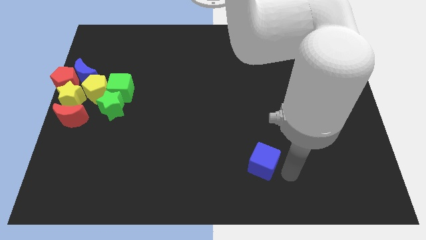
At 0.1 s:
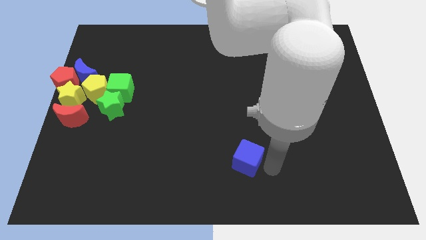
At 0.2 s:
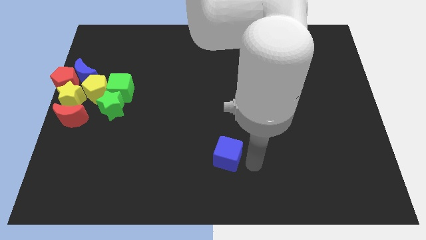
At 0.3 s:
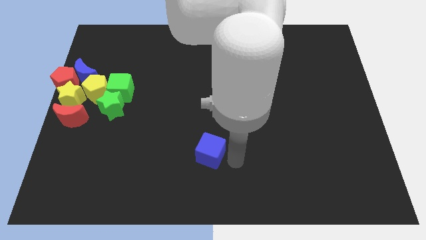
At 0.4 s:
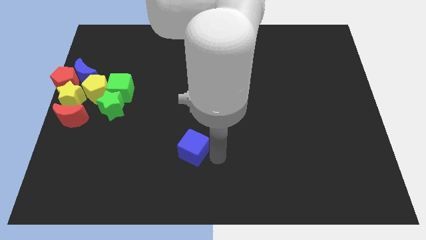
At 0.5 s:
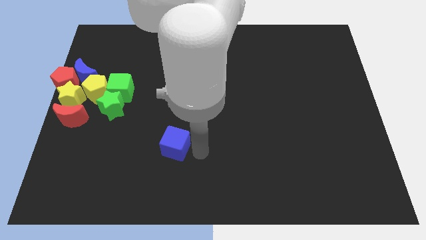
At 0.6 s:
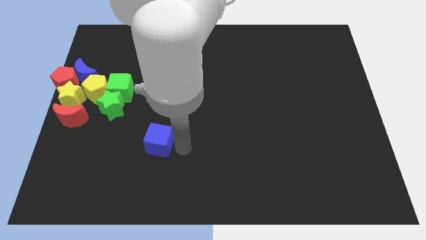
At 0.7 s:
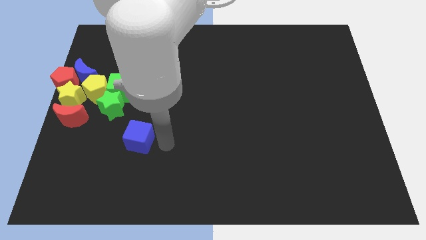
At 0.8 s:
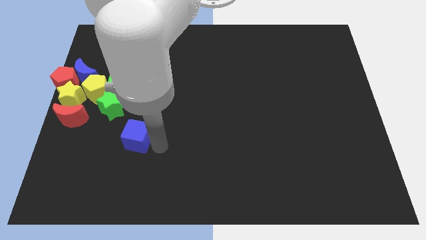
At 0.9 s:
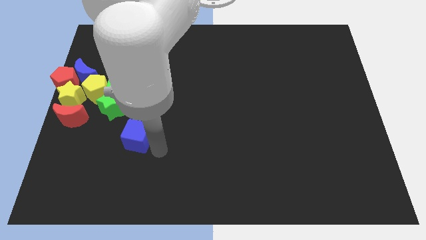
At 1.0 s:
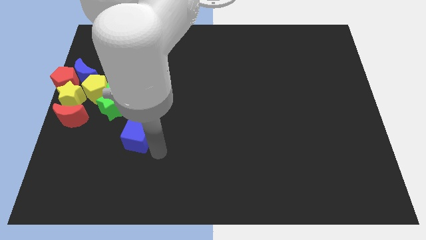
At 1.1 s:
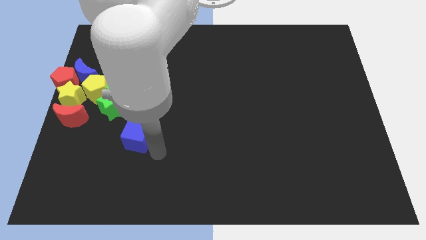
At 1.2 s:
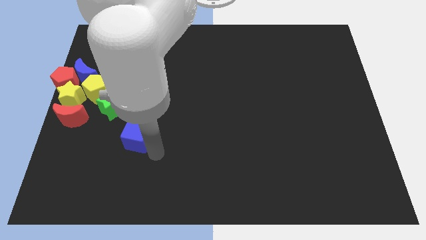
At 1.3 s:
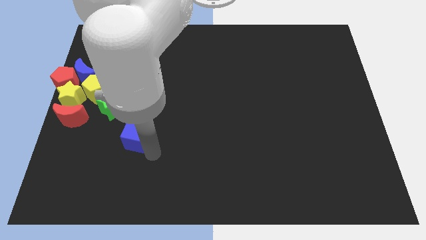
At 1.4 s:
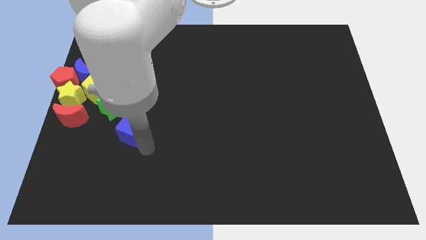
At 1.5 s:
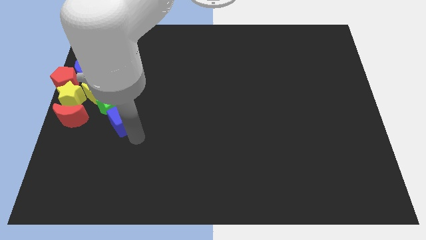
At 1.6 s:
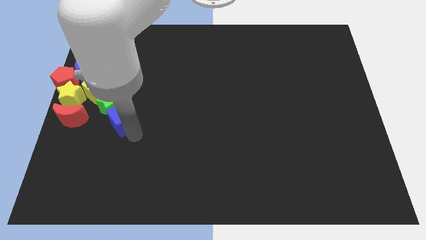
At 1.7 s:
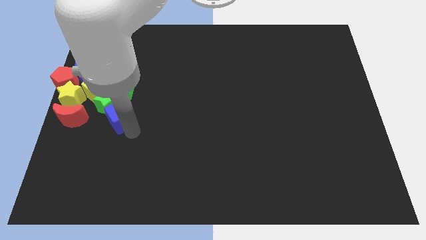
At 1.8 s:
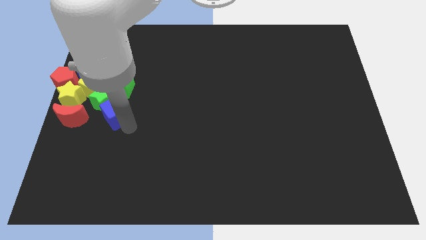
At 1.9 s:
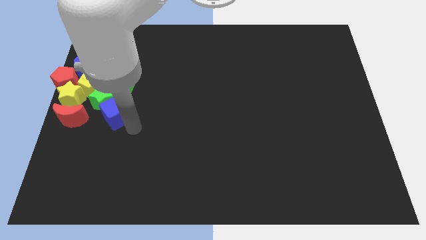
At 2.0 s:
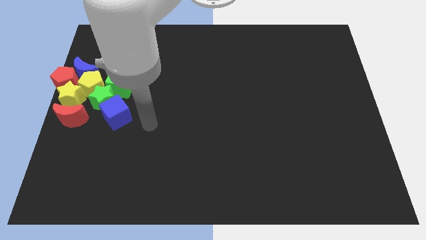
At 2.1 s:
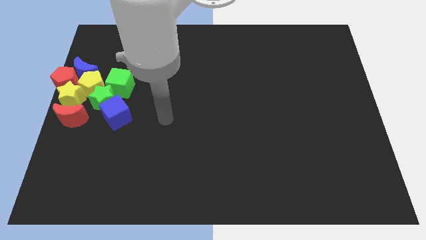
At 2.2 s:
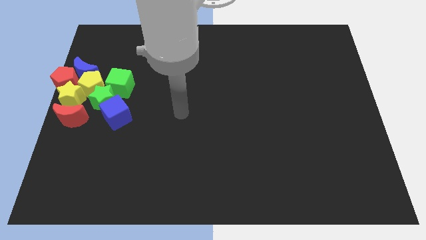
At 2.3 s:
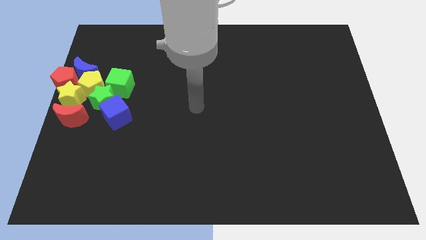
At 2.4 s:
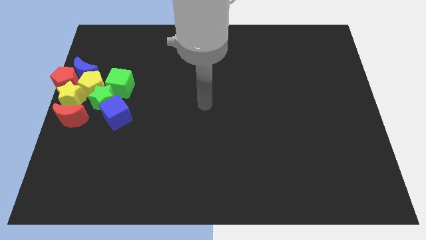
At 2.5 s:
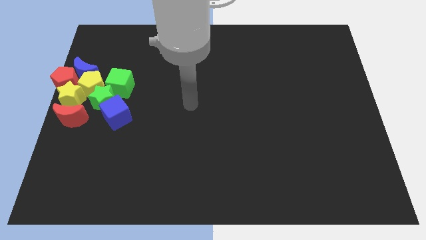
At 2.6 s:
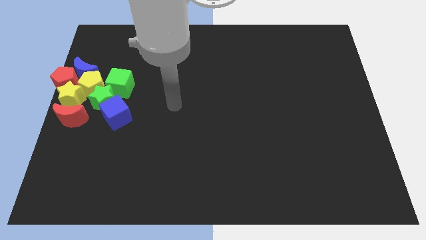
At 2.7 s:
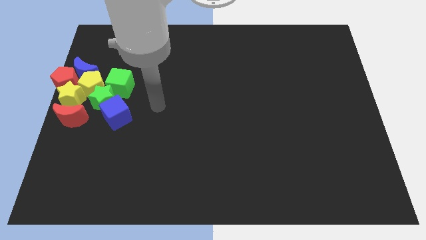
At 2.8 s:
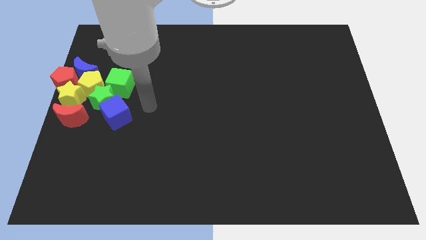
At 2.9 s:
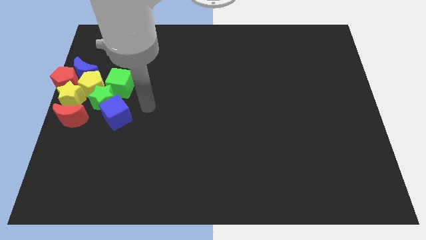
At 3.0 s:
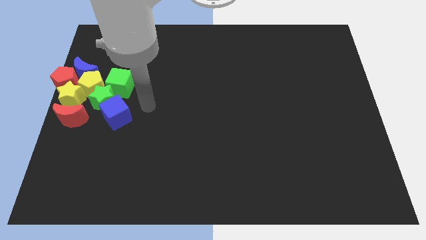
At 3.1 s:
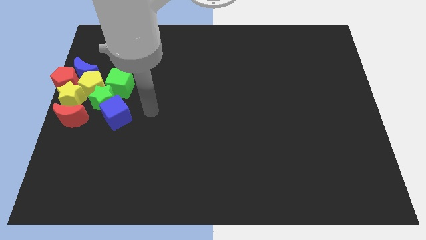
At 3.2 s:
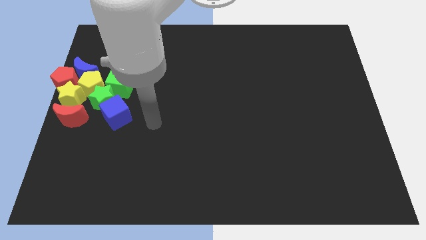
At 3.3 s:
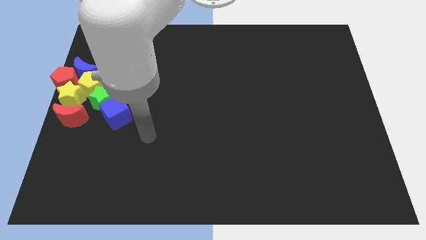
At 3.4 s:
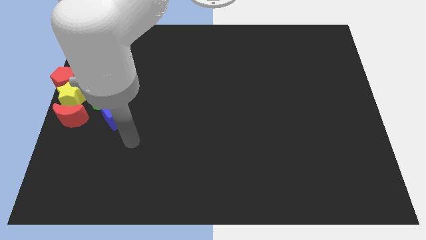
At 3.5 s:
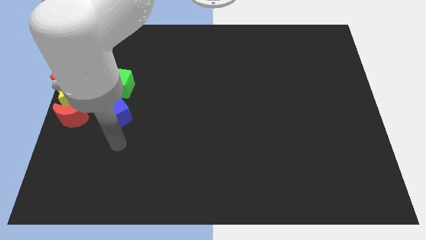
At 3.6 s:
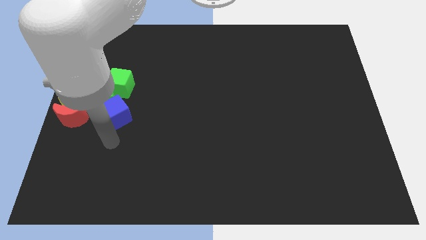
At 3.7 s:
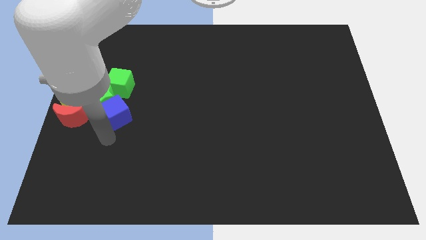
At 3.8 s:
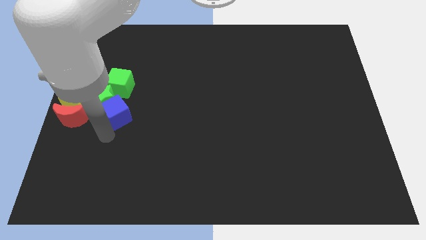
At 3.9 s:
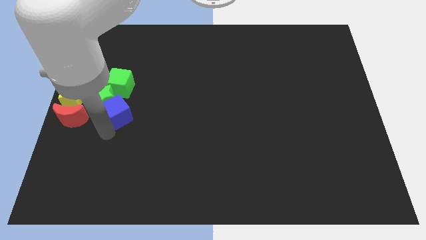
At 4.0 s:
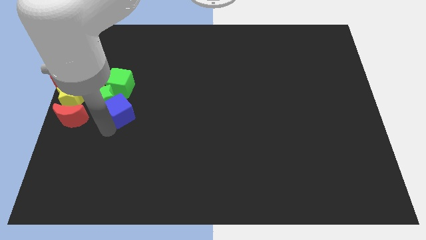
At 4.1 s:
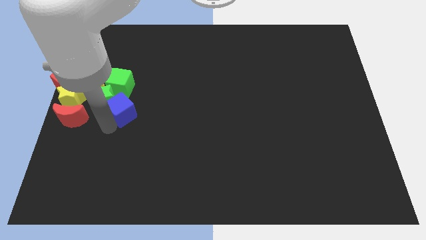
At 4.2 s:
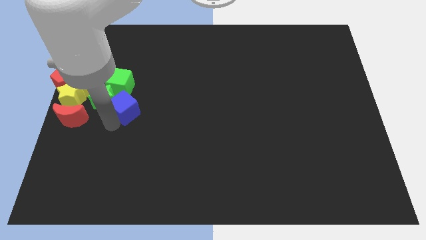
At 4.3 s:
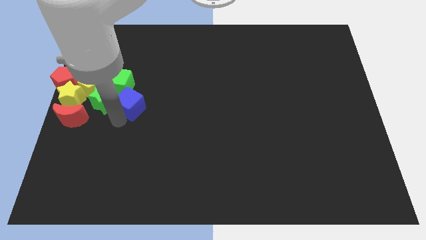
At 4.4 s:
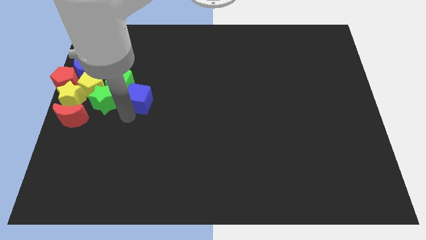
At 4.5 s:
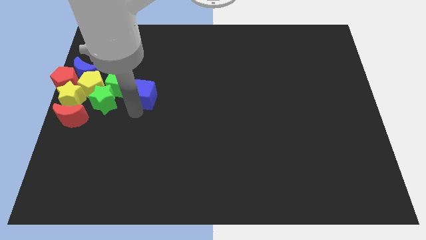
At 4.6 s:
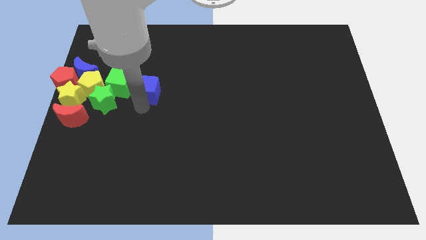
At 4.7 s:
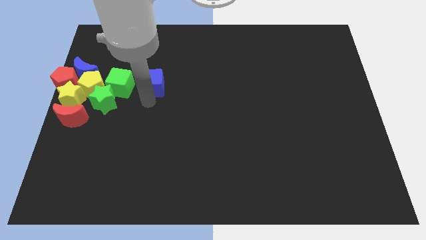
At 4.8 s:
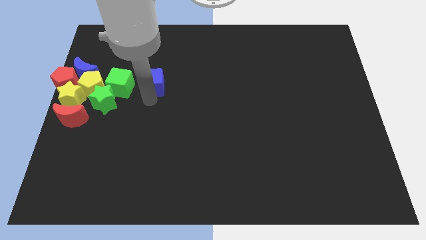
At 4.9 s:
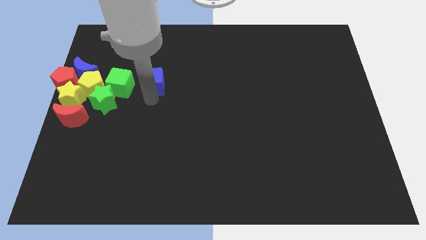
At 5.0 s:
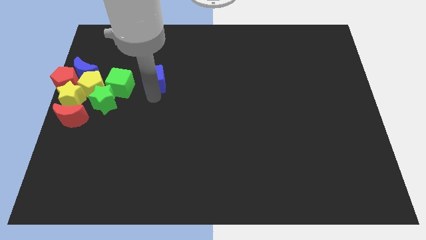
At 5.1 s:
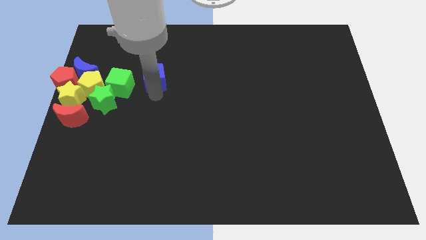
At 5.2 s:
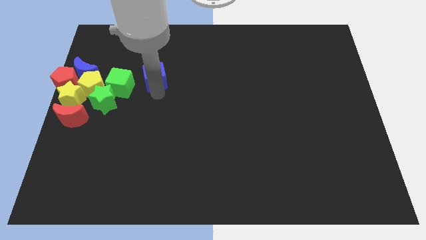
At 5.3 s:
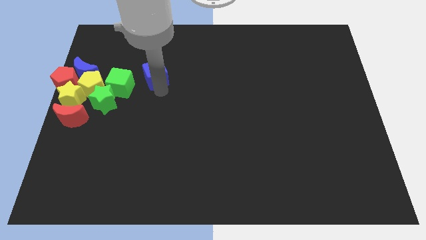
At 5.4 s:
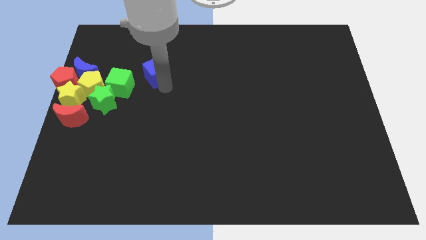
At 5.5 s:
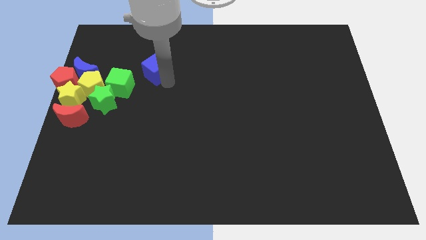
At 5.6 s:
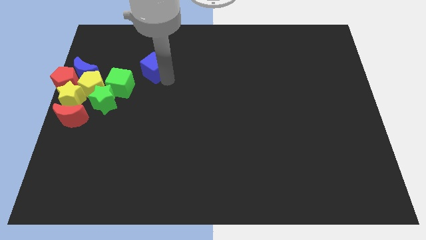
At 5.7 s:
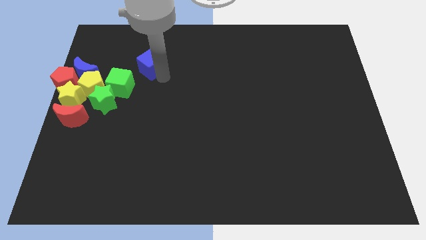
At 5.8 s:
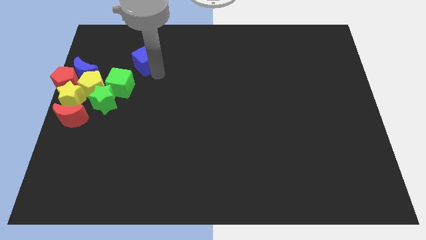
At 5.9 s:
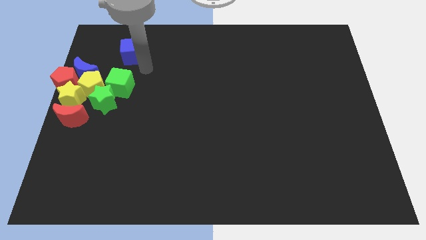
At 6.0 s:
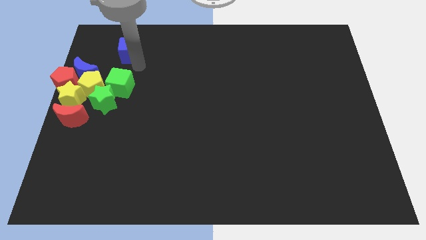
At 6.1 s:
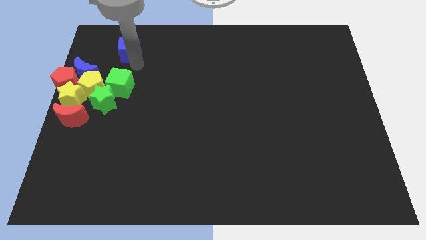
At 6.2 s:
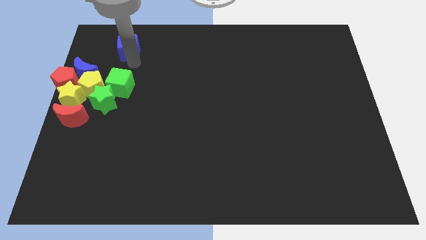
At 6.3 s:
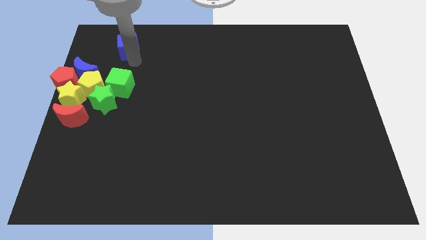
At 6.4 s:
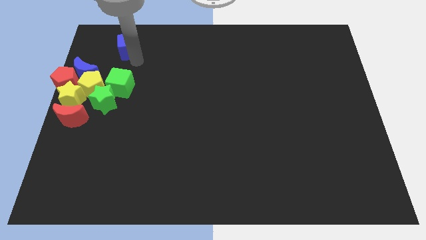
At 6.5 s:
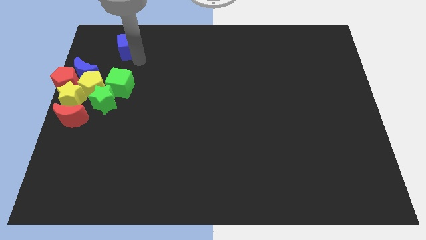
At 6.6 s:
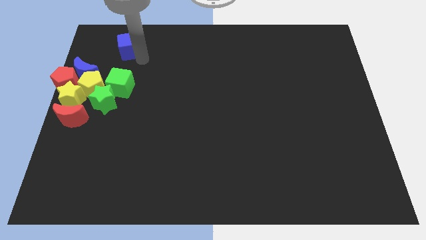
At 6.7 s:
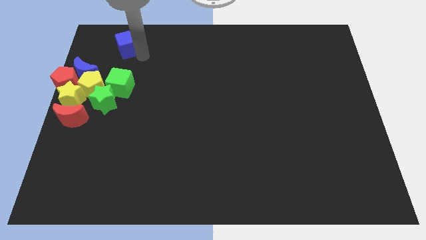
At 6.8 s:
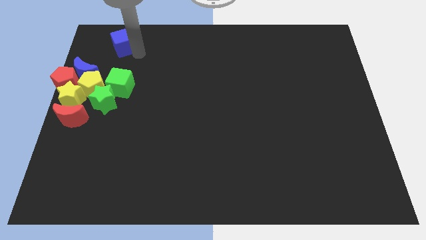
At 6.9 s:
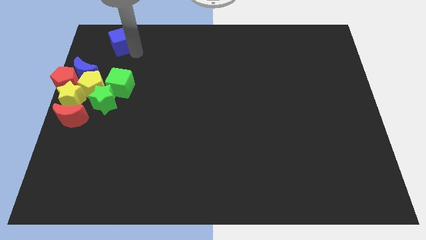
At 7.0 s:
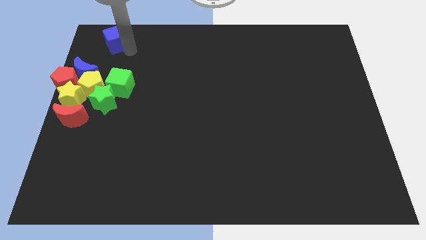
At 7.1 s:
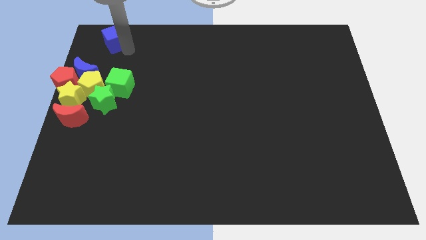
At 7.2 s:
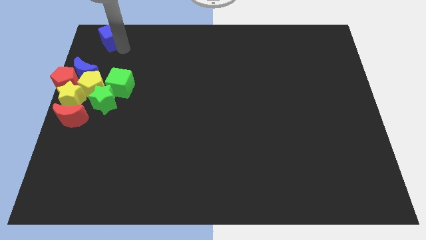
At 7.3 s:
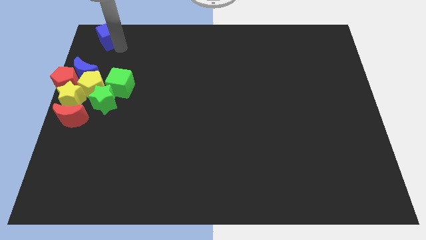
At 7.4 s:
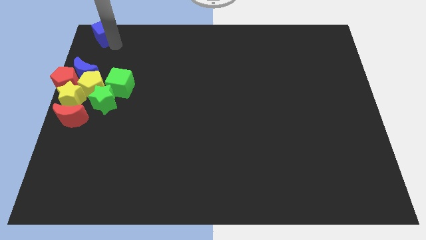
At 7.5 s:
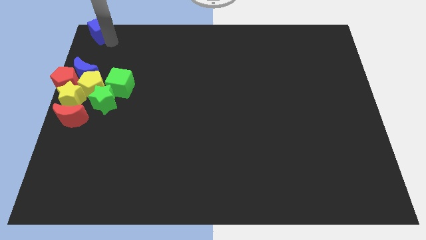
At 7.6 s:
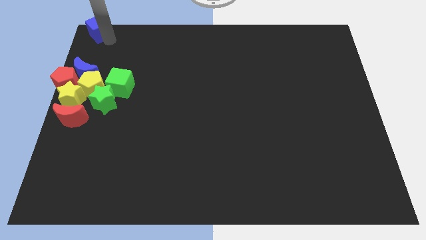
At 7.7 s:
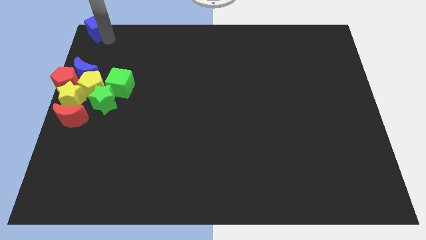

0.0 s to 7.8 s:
place the blue cube at the top left of the board

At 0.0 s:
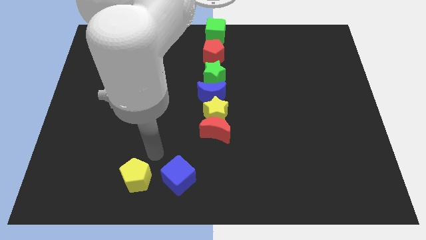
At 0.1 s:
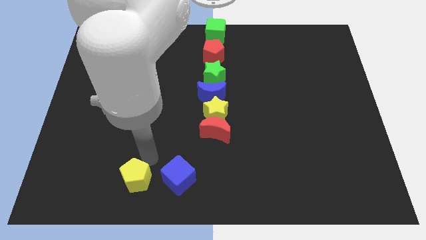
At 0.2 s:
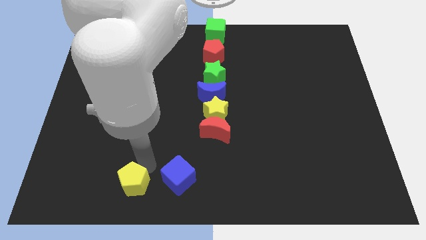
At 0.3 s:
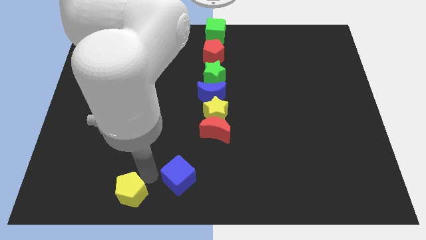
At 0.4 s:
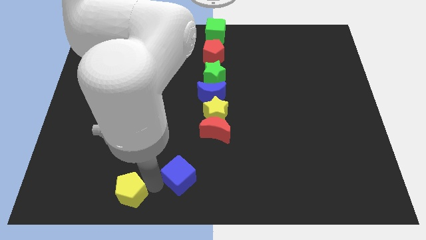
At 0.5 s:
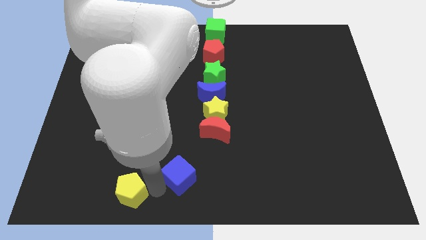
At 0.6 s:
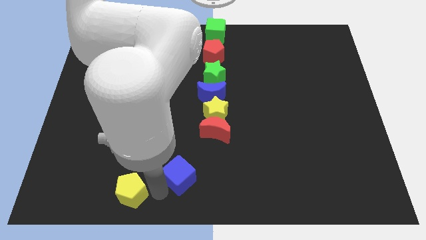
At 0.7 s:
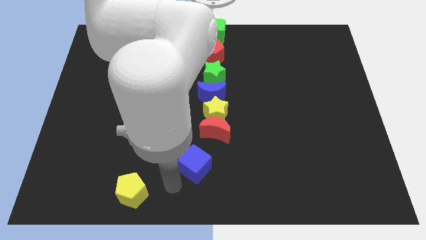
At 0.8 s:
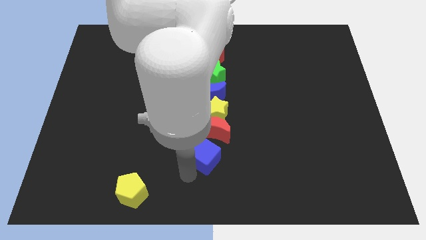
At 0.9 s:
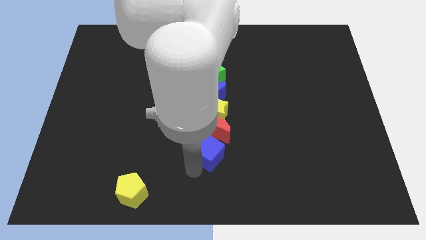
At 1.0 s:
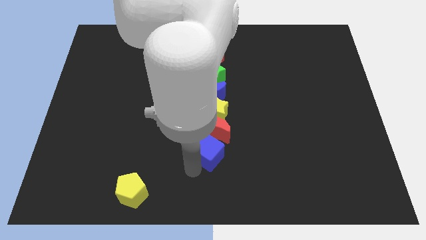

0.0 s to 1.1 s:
separate blue cube from yellow pentagon
